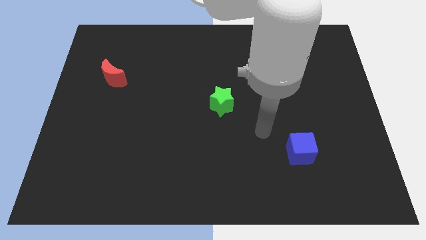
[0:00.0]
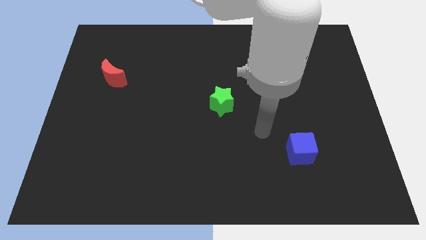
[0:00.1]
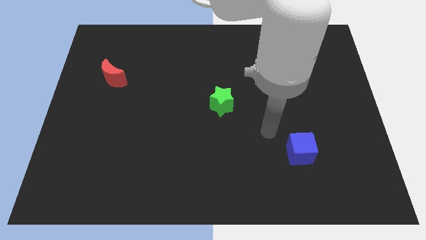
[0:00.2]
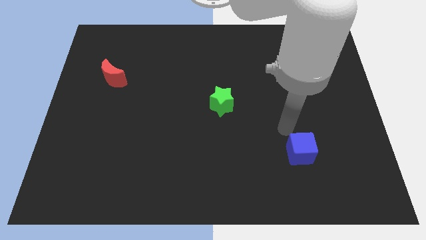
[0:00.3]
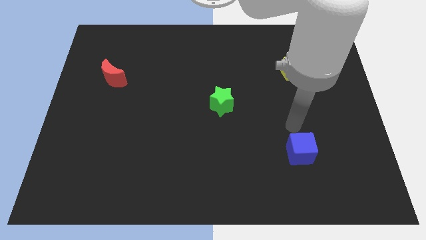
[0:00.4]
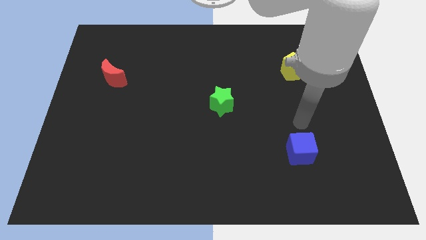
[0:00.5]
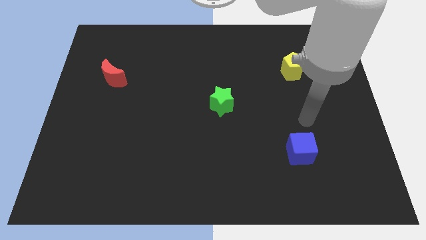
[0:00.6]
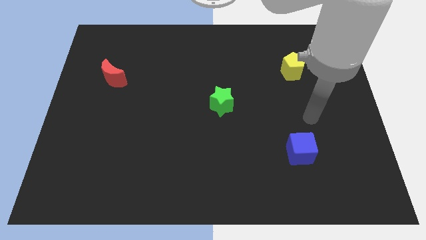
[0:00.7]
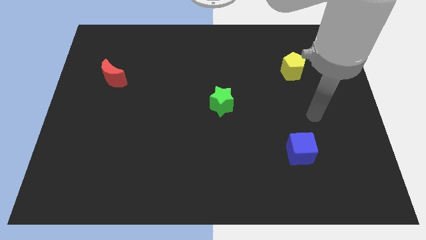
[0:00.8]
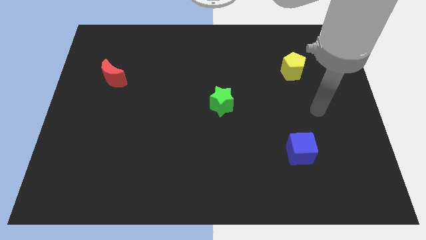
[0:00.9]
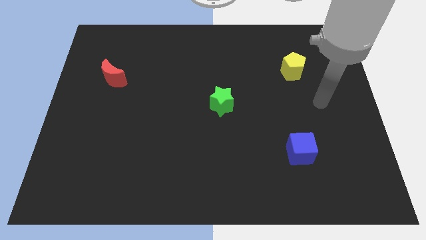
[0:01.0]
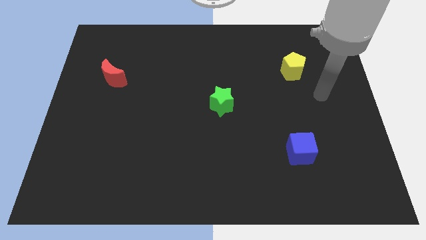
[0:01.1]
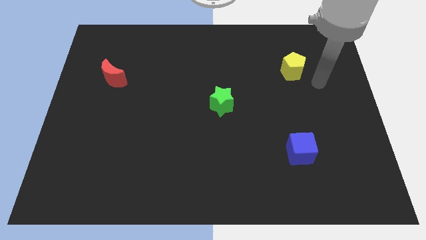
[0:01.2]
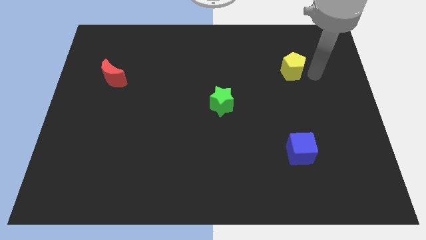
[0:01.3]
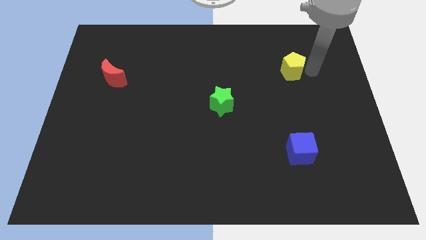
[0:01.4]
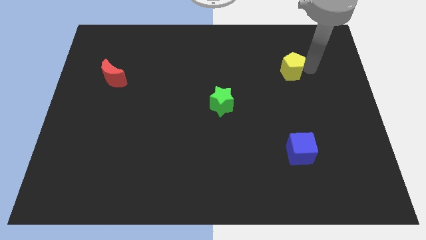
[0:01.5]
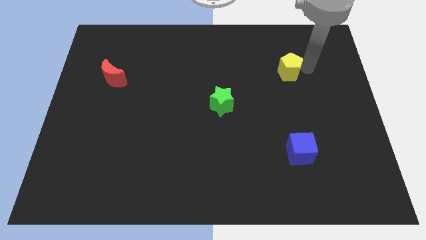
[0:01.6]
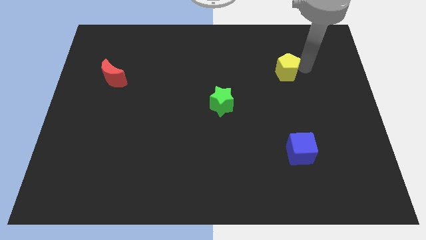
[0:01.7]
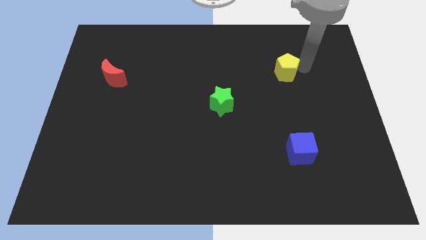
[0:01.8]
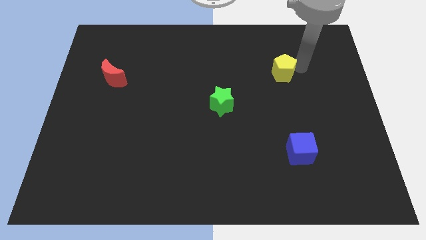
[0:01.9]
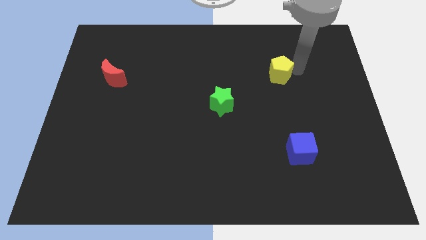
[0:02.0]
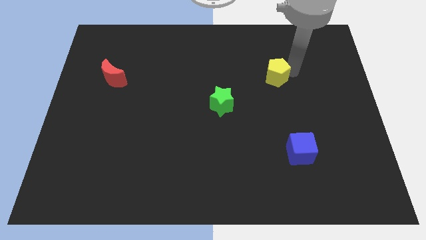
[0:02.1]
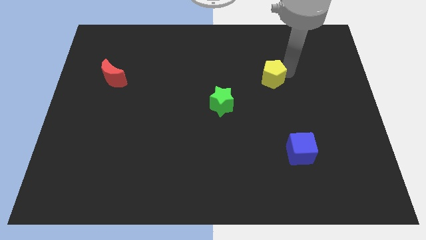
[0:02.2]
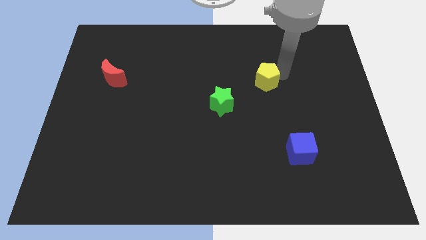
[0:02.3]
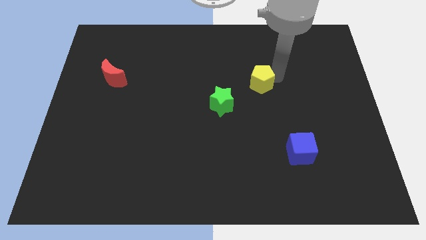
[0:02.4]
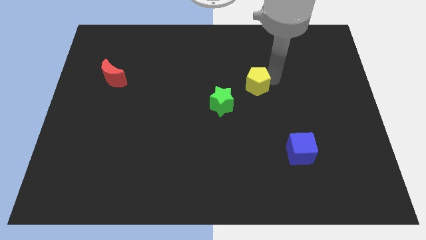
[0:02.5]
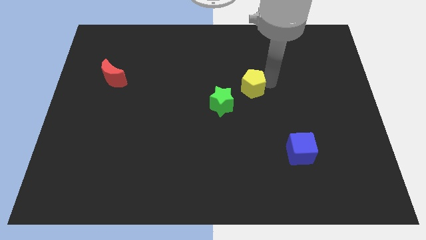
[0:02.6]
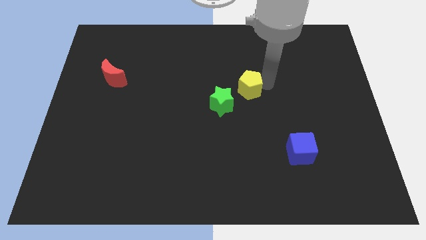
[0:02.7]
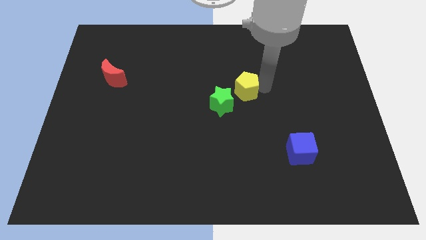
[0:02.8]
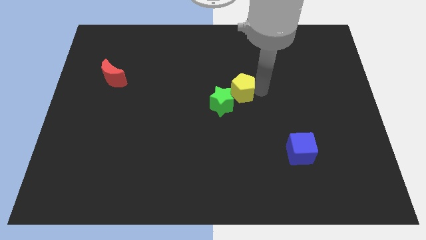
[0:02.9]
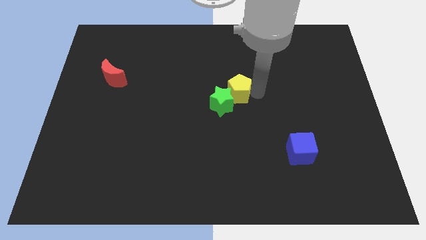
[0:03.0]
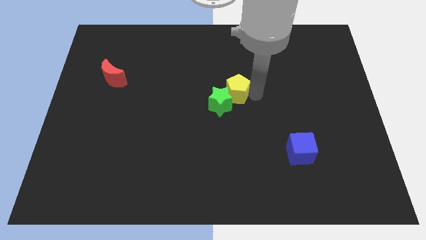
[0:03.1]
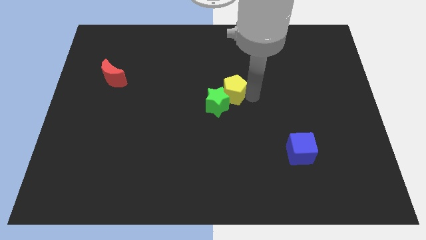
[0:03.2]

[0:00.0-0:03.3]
move the yellow block close to the green block

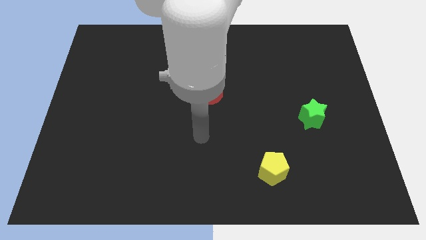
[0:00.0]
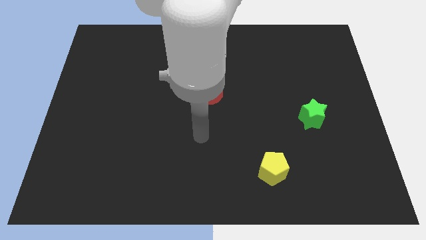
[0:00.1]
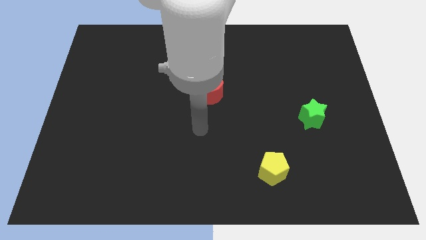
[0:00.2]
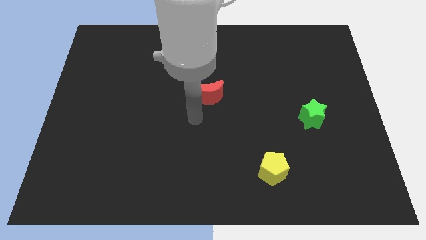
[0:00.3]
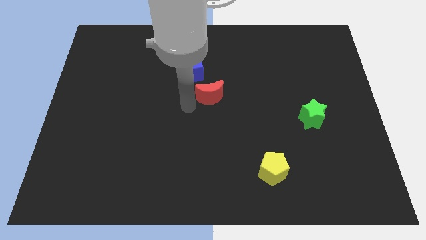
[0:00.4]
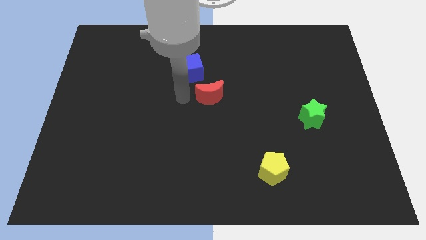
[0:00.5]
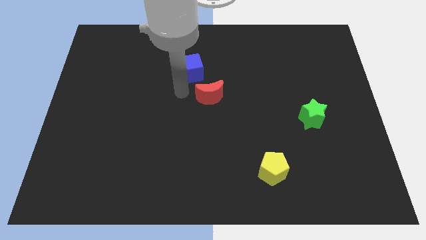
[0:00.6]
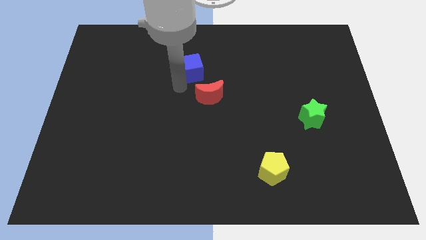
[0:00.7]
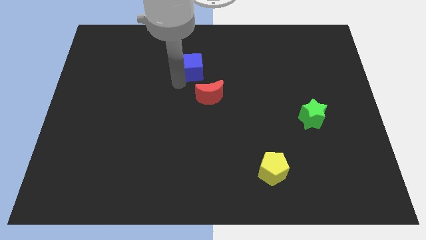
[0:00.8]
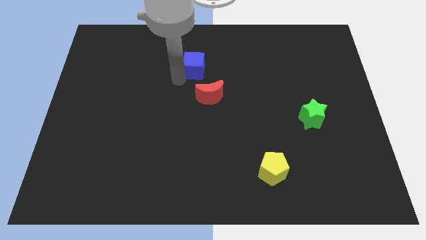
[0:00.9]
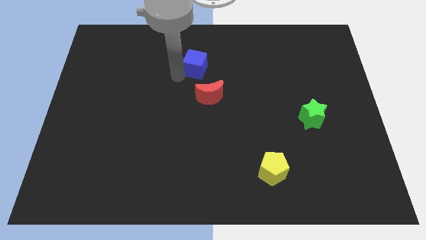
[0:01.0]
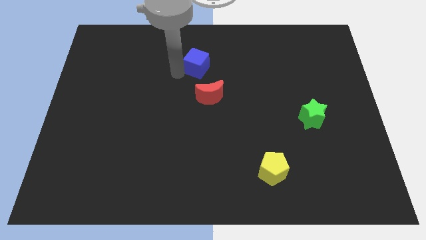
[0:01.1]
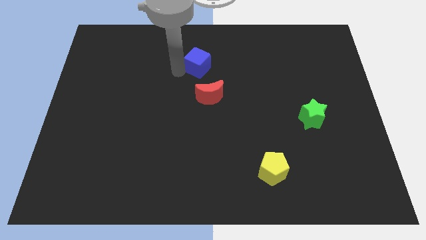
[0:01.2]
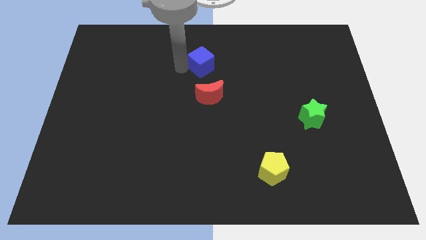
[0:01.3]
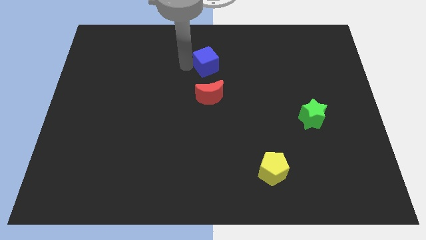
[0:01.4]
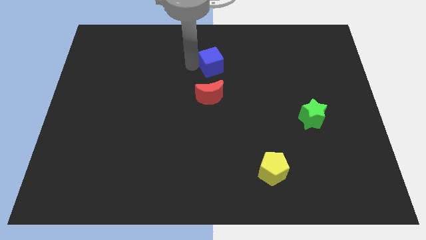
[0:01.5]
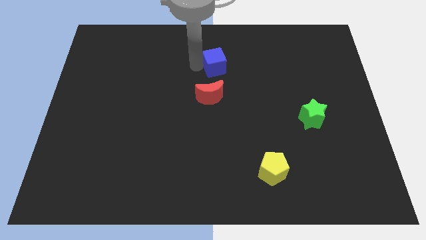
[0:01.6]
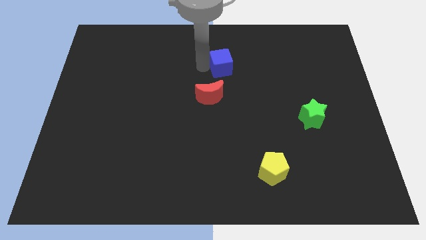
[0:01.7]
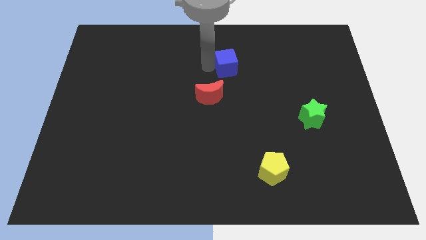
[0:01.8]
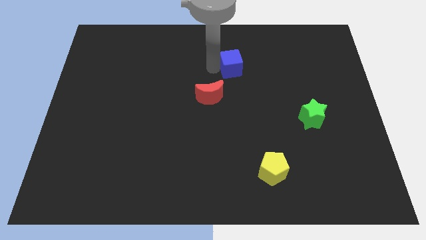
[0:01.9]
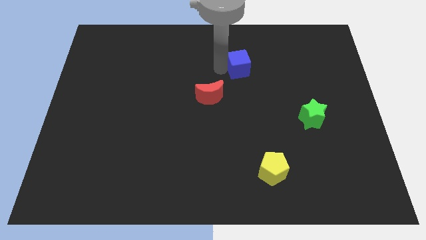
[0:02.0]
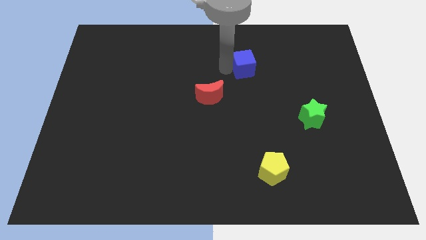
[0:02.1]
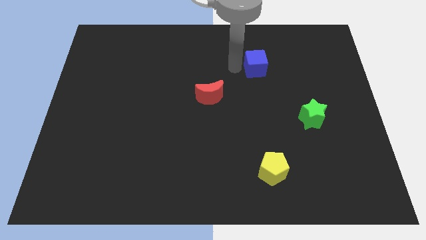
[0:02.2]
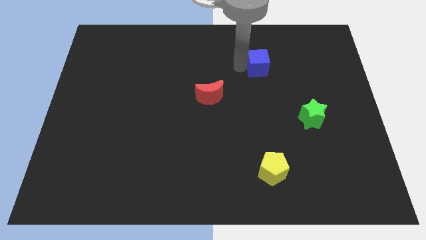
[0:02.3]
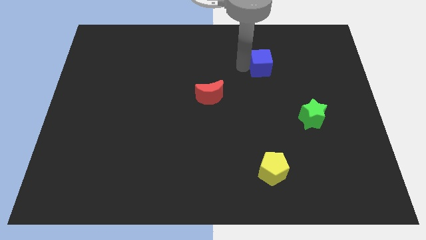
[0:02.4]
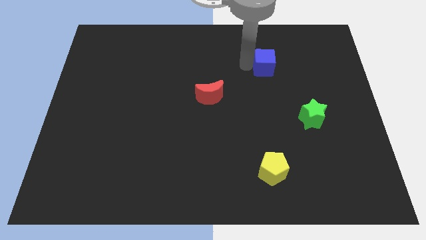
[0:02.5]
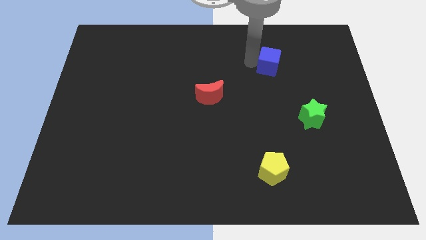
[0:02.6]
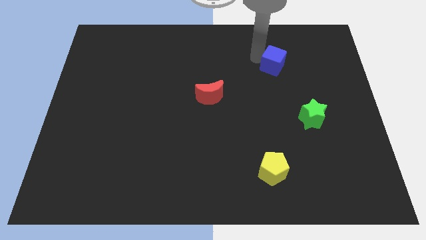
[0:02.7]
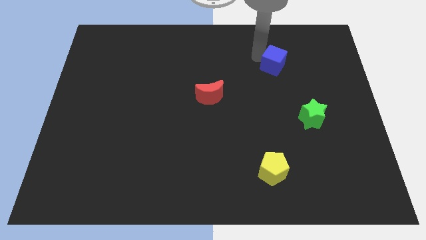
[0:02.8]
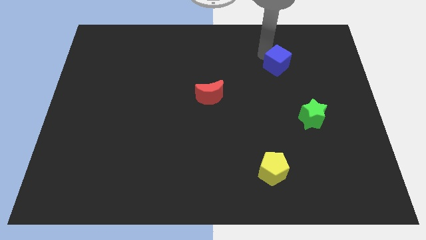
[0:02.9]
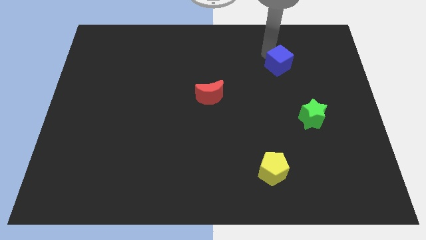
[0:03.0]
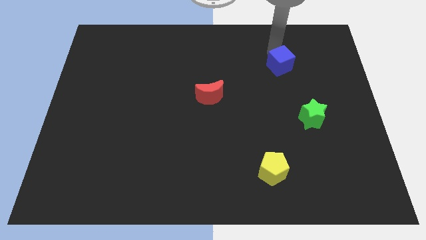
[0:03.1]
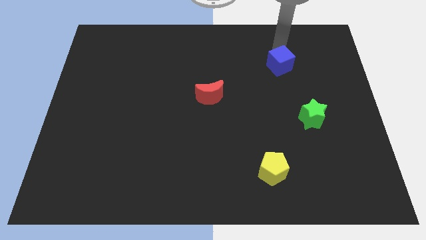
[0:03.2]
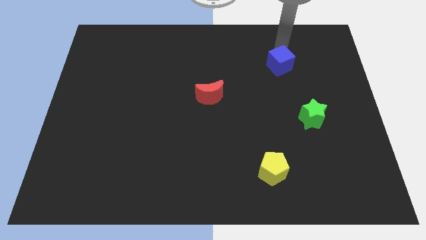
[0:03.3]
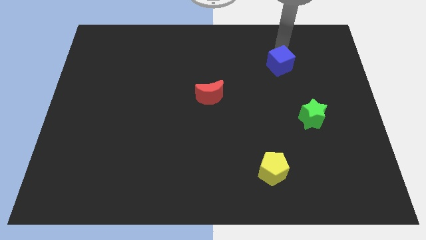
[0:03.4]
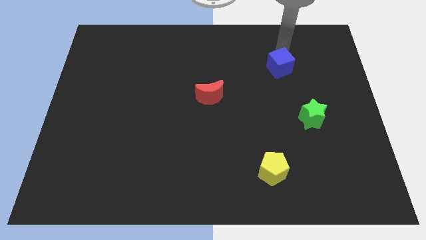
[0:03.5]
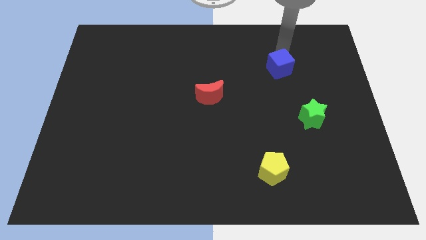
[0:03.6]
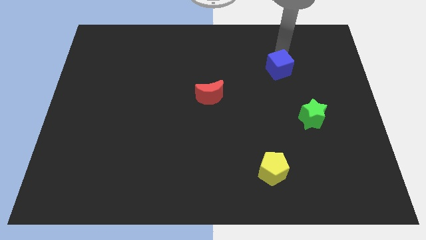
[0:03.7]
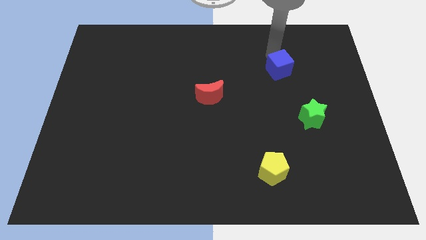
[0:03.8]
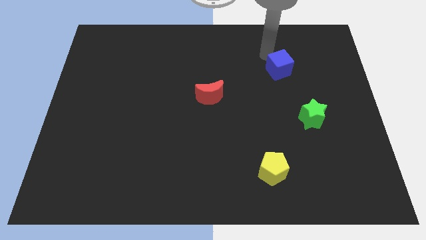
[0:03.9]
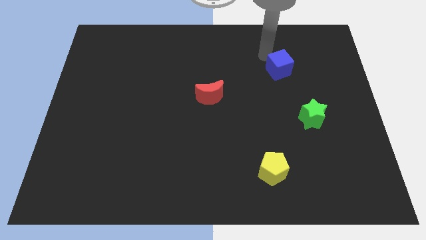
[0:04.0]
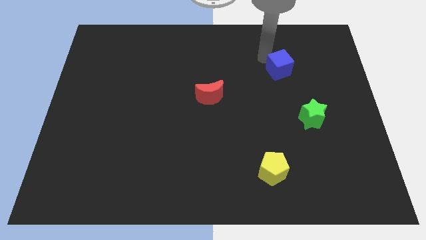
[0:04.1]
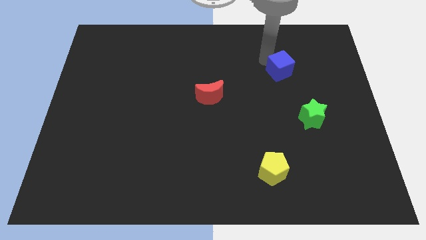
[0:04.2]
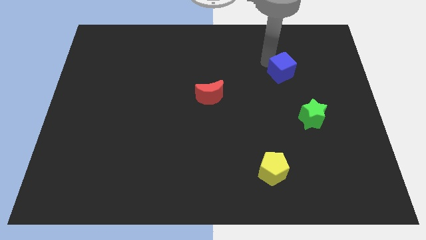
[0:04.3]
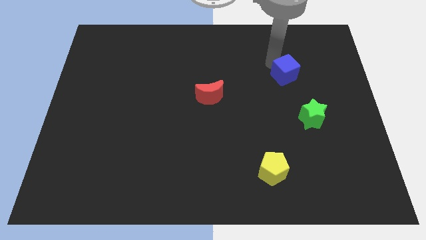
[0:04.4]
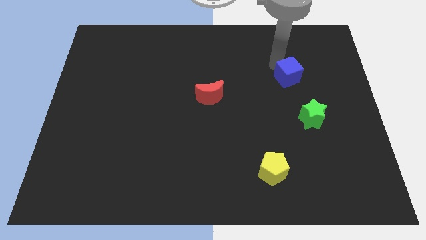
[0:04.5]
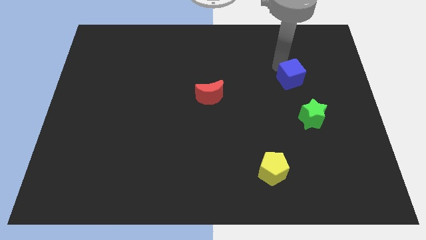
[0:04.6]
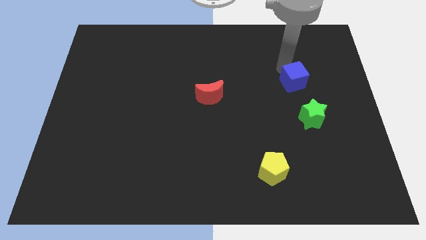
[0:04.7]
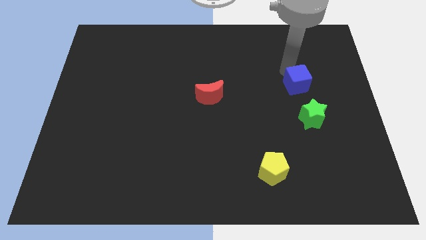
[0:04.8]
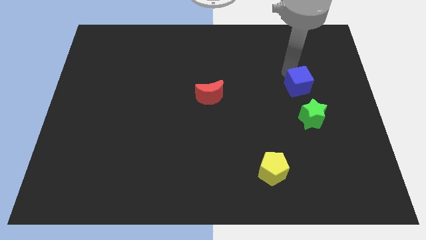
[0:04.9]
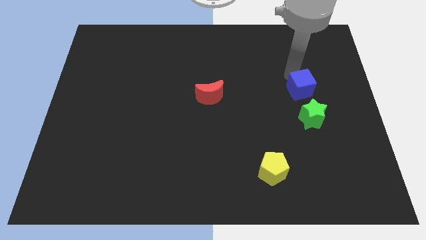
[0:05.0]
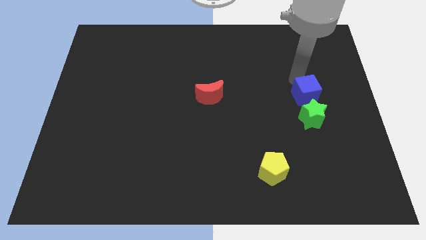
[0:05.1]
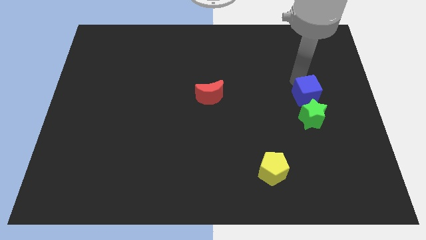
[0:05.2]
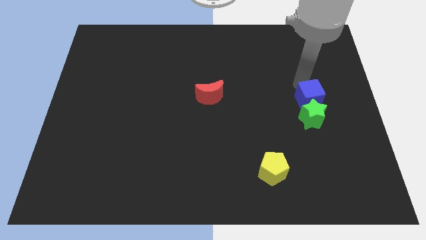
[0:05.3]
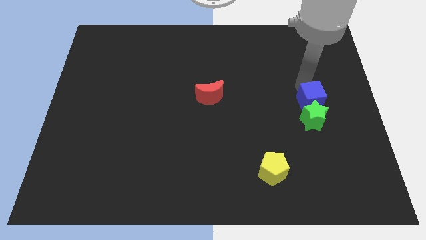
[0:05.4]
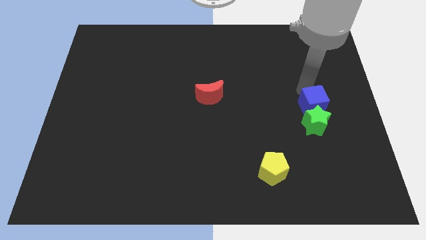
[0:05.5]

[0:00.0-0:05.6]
put the blue cube close to the star
